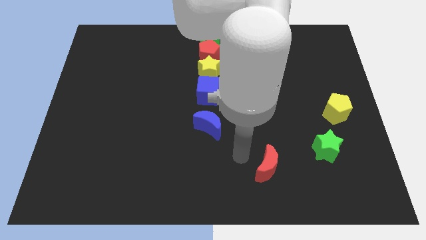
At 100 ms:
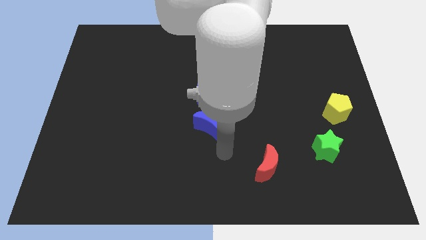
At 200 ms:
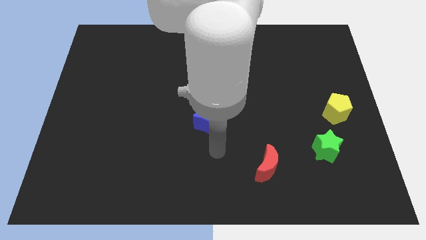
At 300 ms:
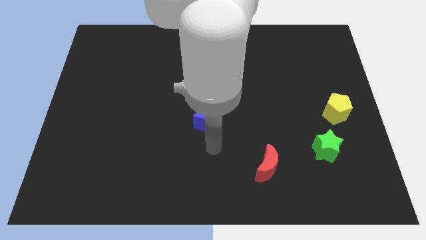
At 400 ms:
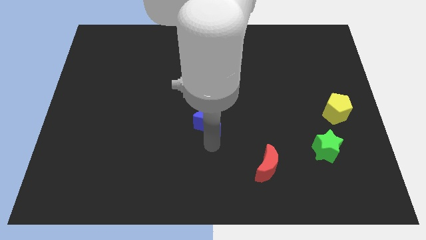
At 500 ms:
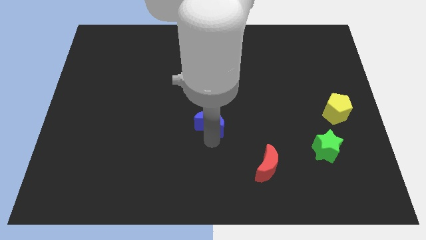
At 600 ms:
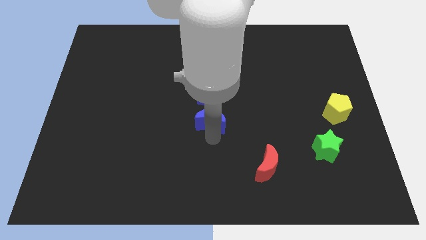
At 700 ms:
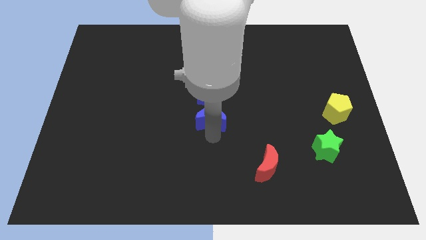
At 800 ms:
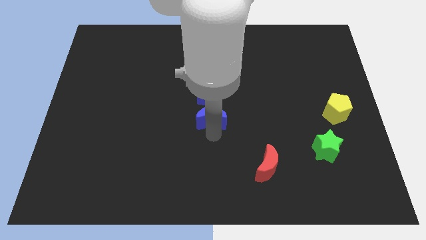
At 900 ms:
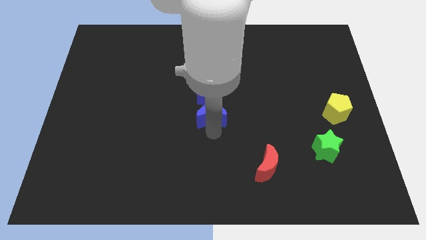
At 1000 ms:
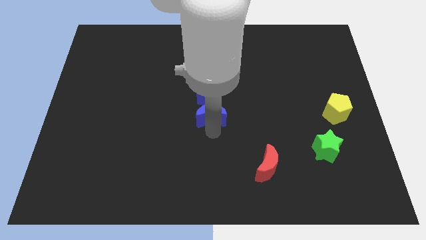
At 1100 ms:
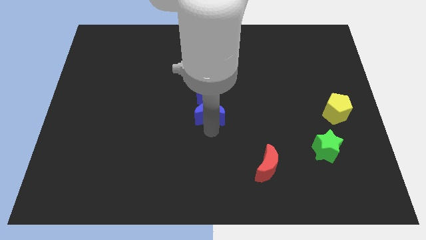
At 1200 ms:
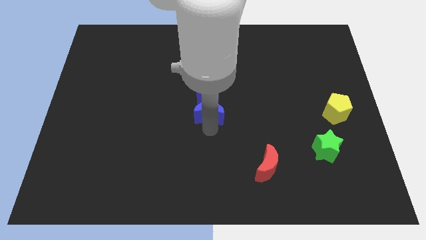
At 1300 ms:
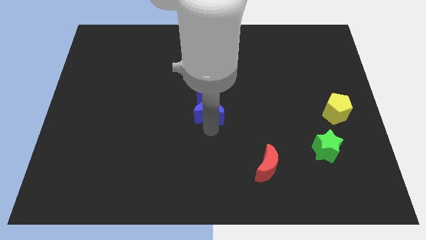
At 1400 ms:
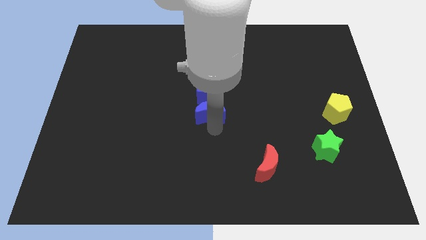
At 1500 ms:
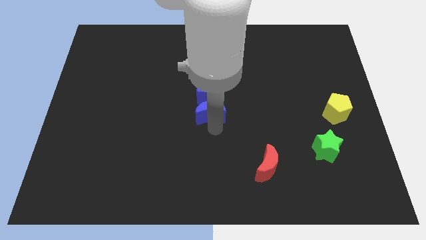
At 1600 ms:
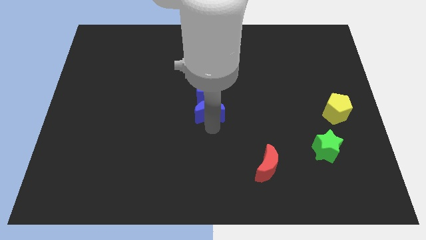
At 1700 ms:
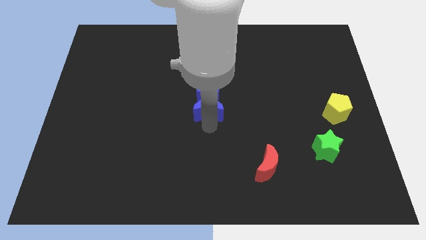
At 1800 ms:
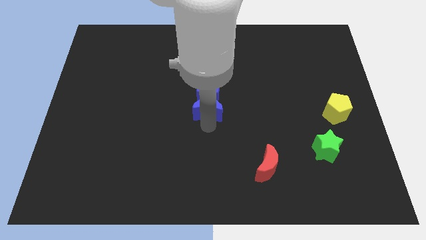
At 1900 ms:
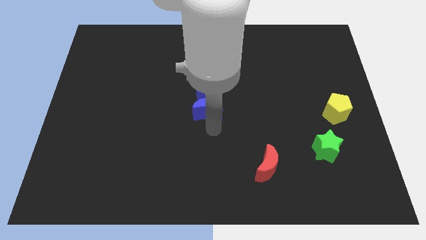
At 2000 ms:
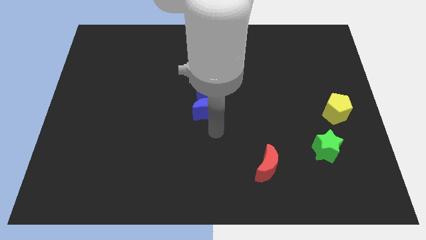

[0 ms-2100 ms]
push the blue moon to the bottom of blue cube

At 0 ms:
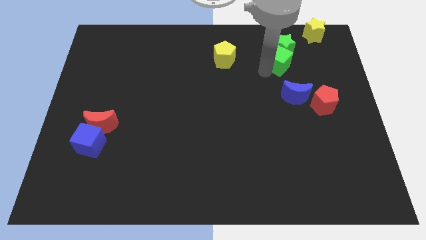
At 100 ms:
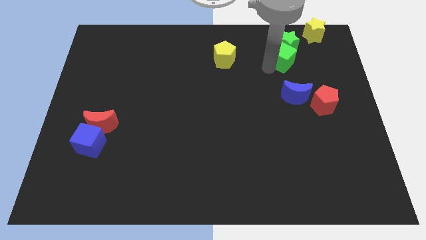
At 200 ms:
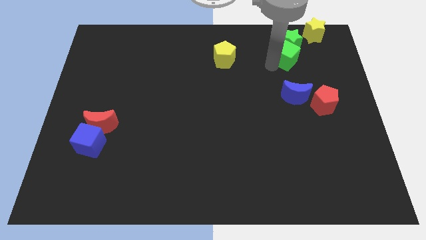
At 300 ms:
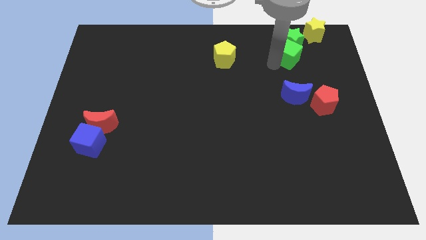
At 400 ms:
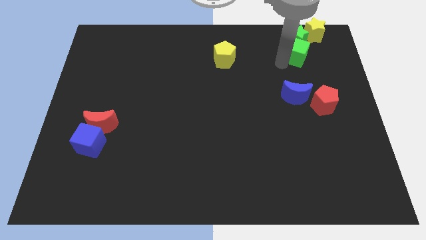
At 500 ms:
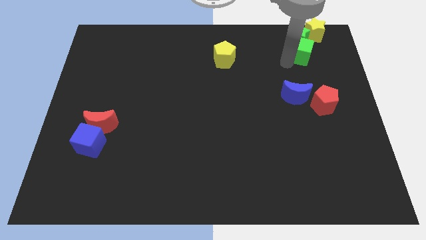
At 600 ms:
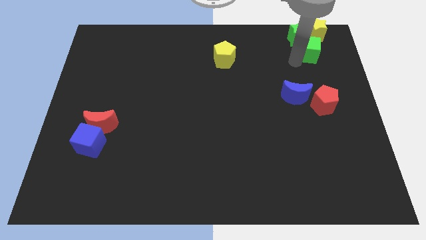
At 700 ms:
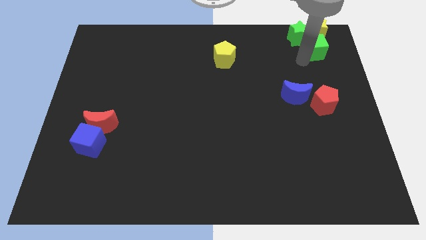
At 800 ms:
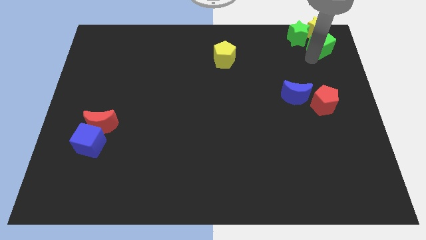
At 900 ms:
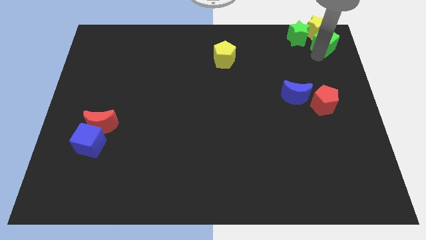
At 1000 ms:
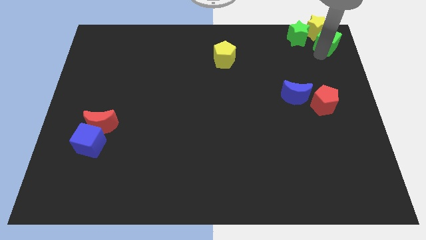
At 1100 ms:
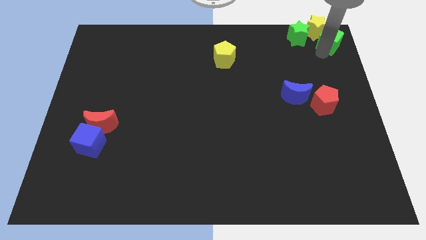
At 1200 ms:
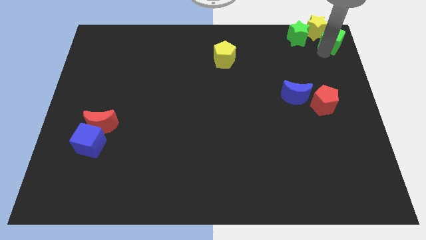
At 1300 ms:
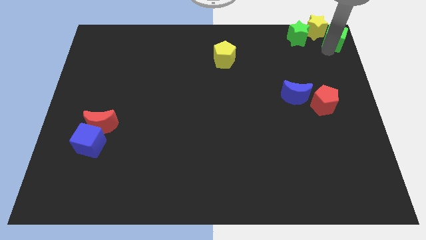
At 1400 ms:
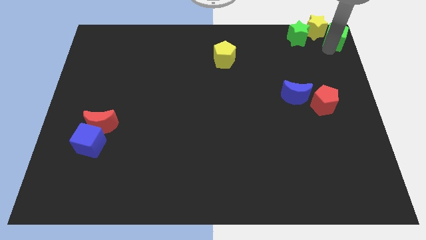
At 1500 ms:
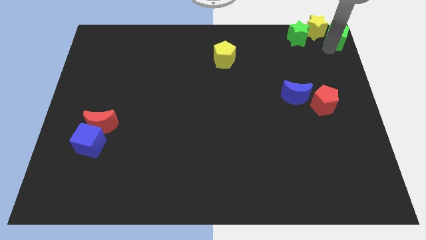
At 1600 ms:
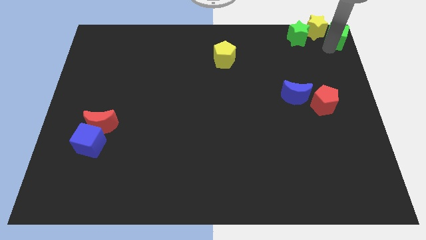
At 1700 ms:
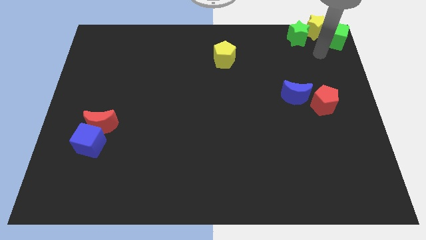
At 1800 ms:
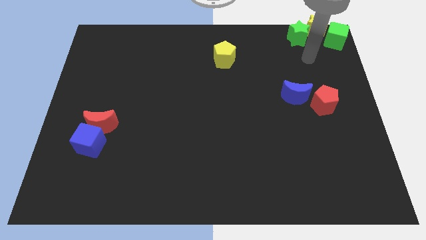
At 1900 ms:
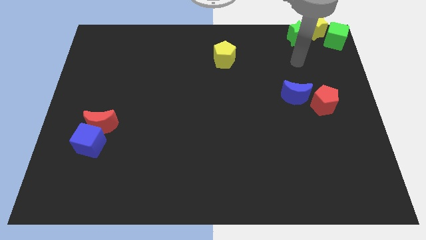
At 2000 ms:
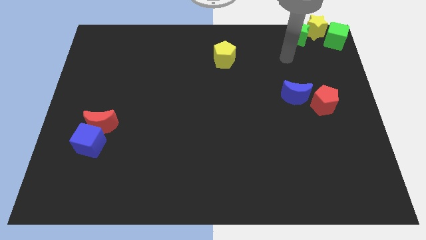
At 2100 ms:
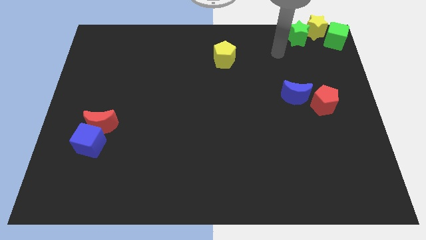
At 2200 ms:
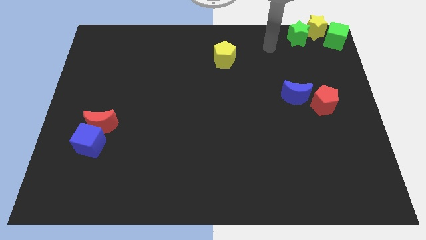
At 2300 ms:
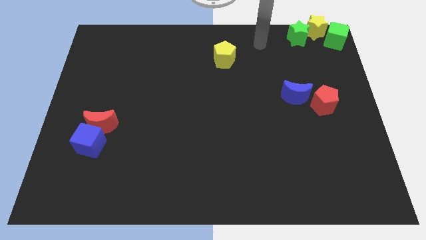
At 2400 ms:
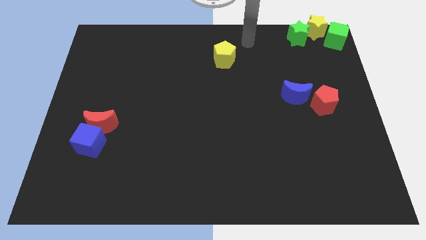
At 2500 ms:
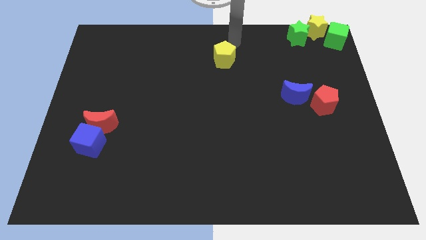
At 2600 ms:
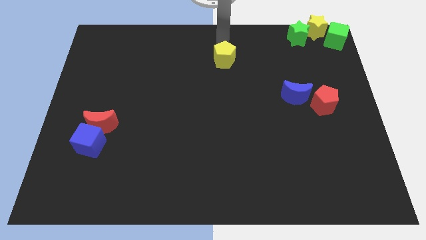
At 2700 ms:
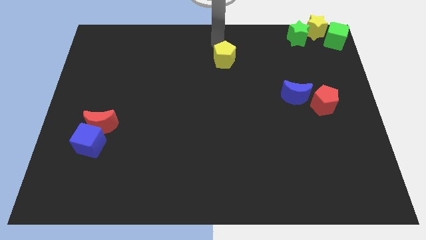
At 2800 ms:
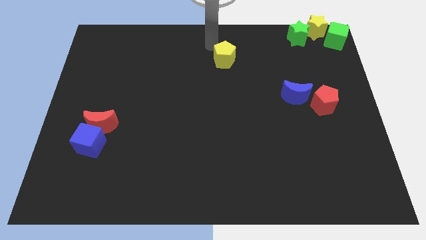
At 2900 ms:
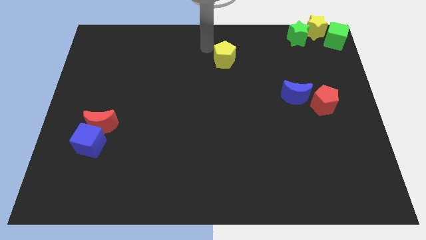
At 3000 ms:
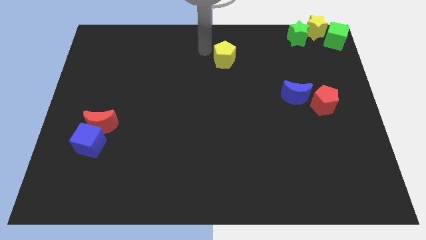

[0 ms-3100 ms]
move the two green blocks to the top right corner of the board

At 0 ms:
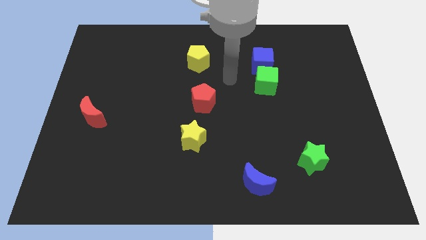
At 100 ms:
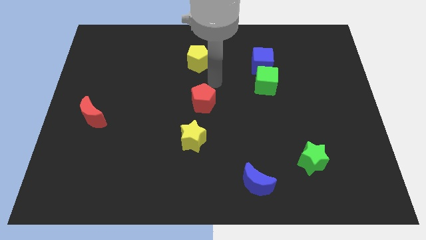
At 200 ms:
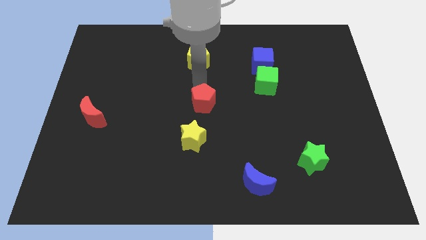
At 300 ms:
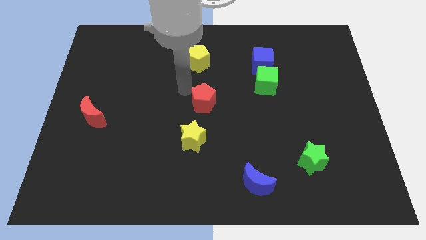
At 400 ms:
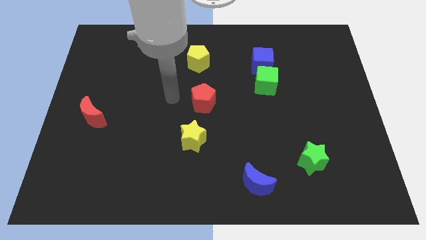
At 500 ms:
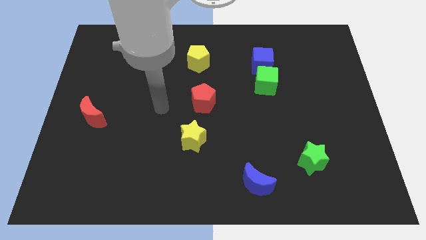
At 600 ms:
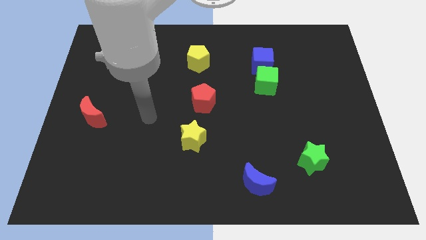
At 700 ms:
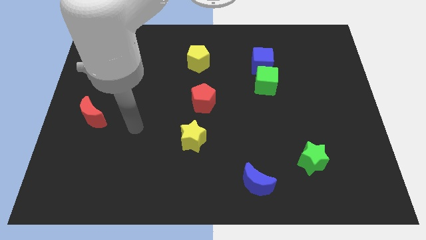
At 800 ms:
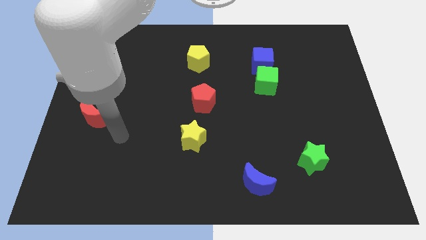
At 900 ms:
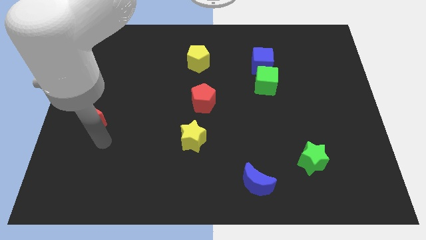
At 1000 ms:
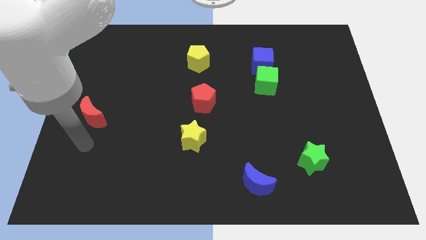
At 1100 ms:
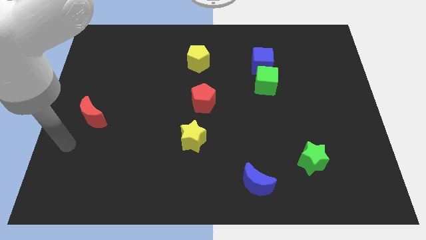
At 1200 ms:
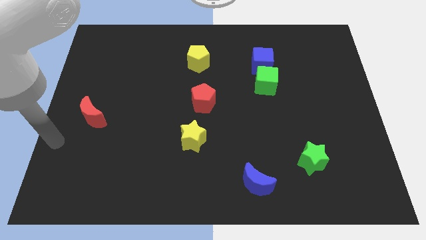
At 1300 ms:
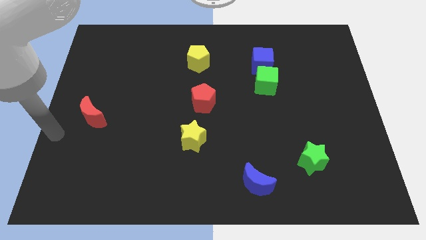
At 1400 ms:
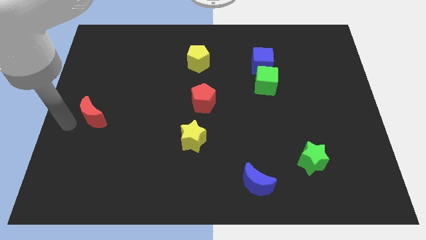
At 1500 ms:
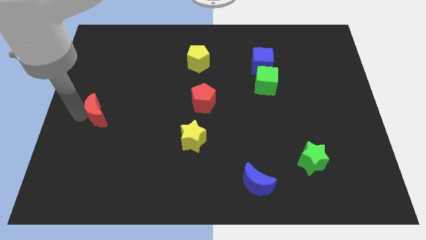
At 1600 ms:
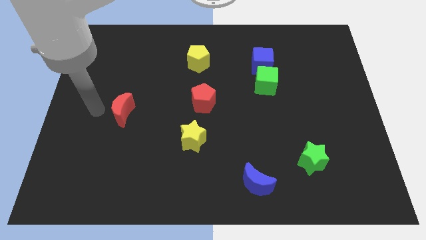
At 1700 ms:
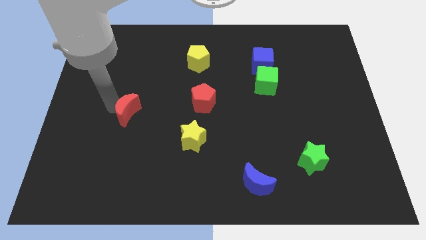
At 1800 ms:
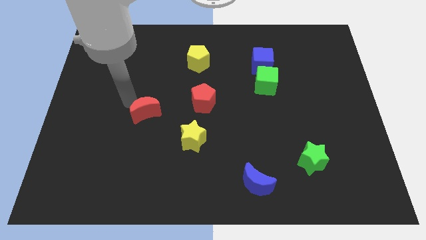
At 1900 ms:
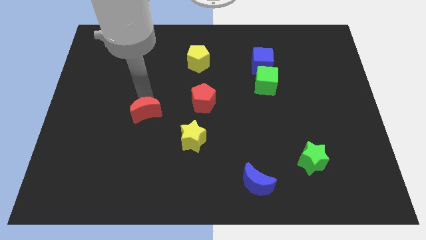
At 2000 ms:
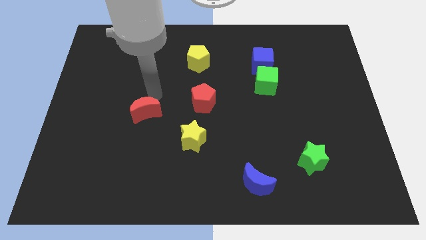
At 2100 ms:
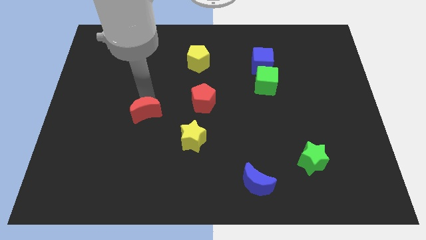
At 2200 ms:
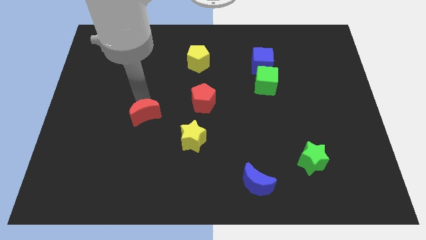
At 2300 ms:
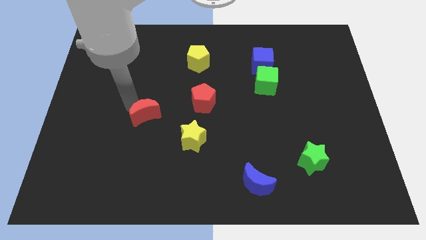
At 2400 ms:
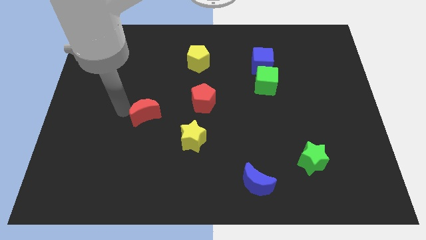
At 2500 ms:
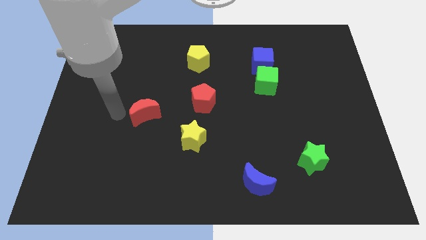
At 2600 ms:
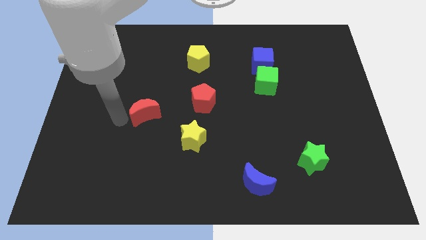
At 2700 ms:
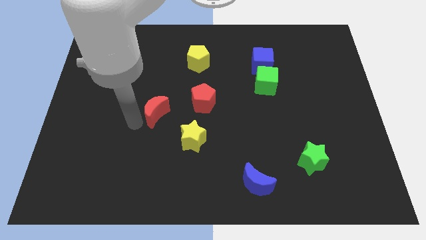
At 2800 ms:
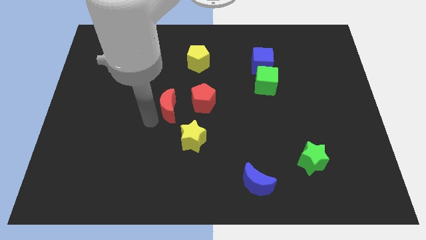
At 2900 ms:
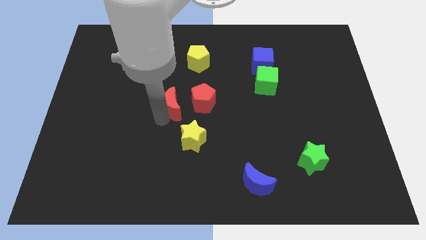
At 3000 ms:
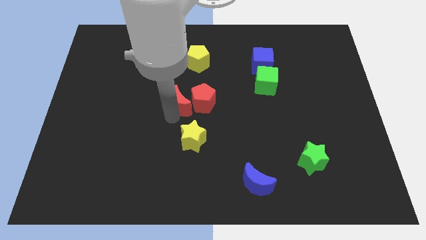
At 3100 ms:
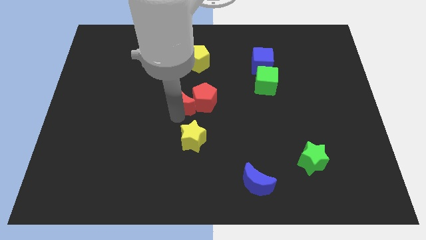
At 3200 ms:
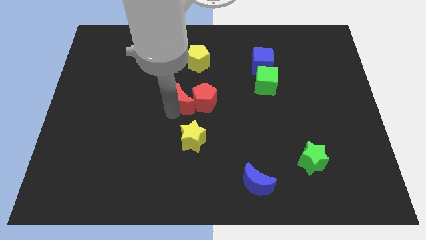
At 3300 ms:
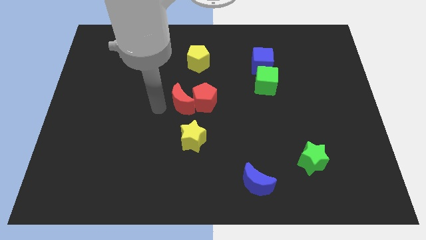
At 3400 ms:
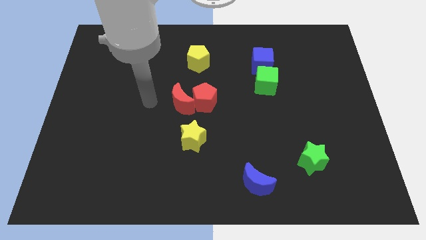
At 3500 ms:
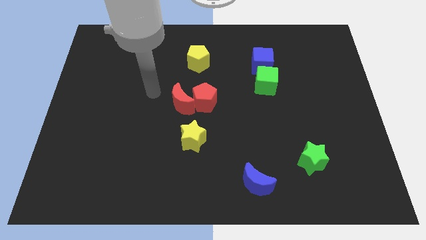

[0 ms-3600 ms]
move the red crescent to the left of the red pentagon

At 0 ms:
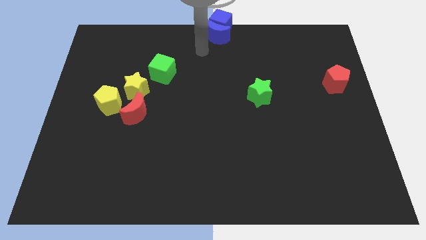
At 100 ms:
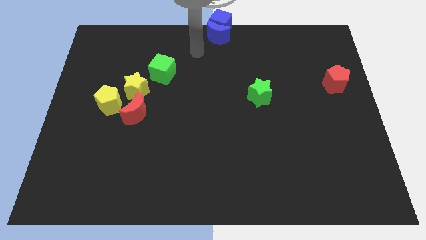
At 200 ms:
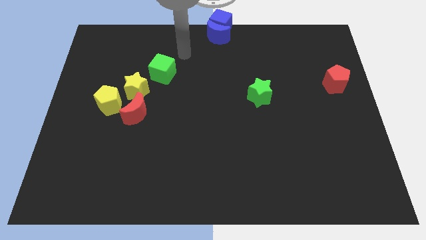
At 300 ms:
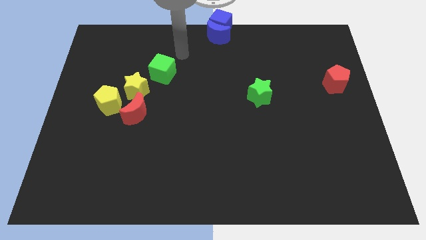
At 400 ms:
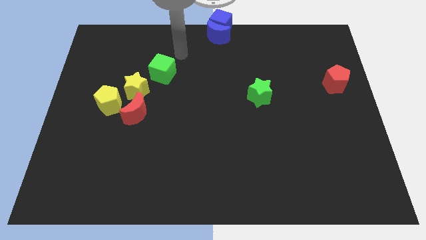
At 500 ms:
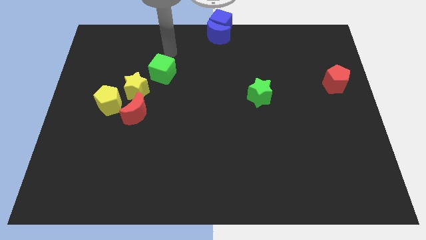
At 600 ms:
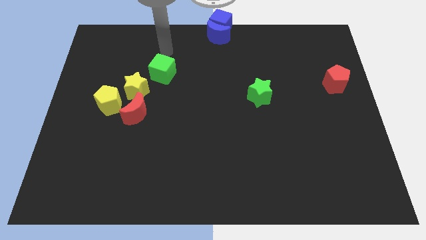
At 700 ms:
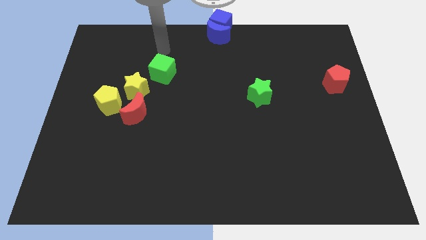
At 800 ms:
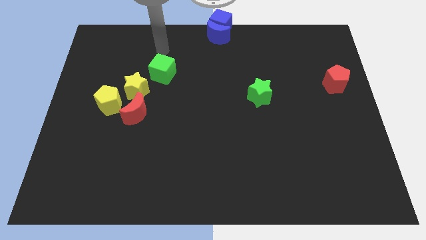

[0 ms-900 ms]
place your hand above the green cube
